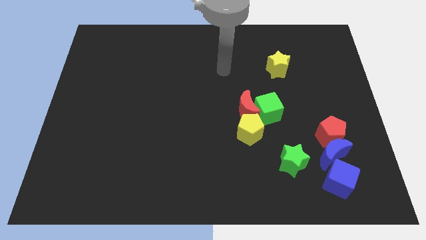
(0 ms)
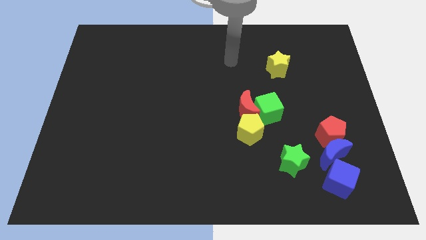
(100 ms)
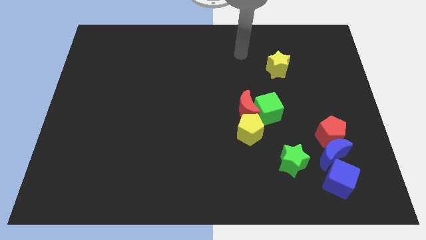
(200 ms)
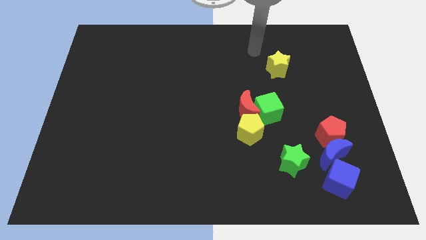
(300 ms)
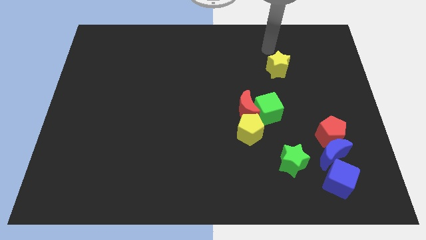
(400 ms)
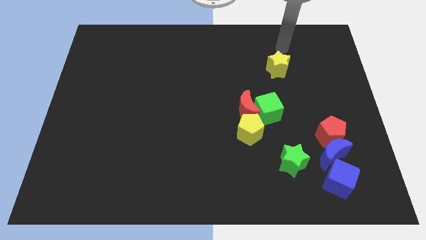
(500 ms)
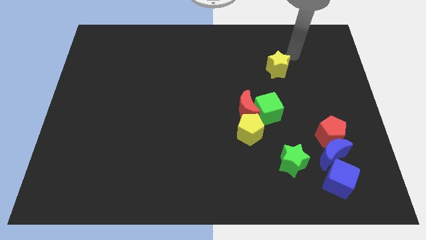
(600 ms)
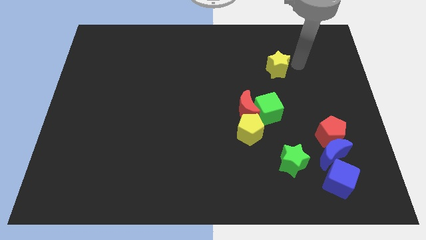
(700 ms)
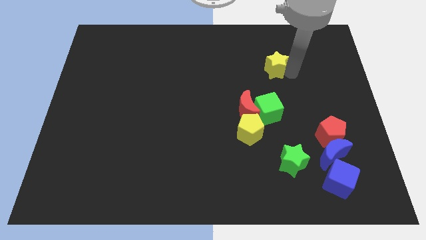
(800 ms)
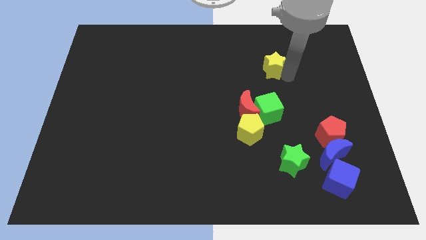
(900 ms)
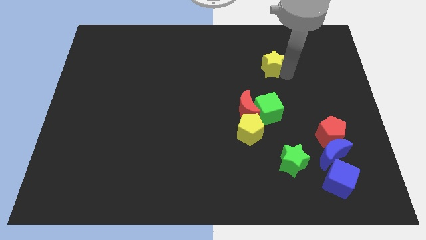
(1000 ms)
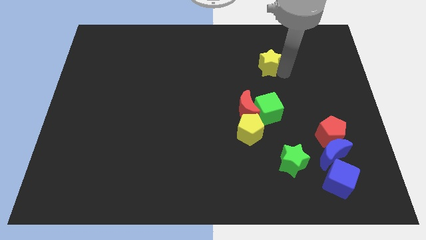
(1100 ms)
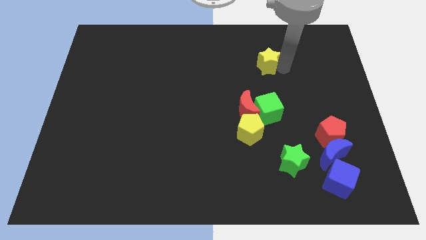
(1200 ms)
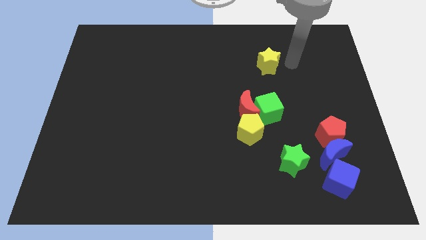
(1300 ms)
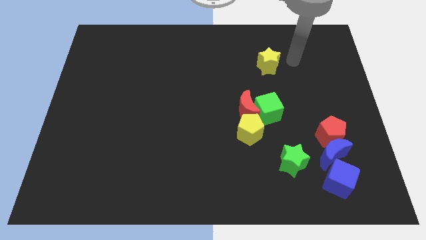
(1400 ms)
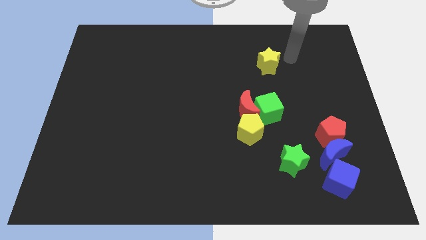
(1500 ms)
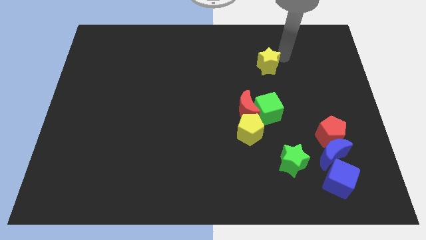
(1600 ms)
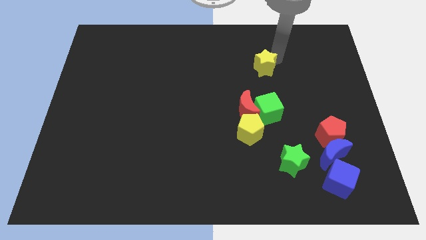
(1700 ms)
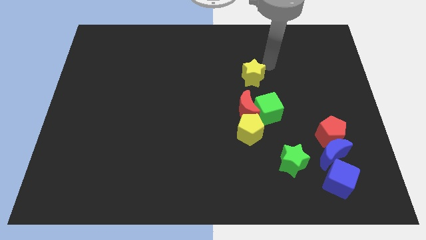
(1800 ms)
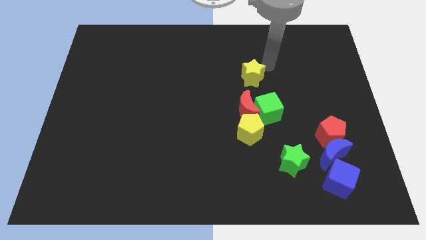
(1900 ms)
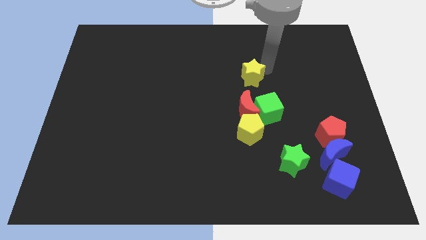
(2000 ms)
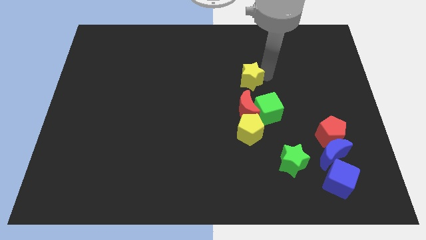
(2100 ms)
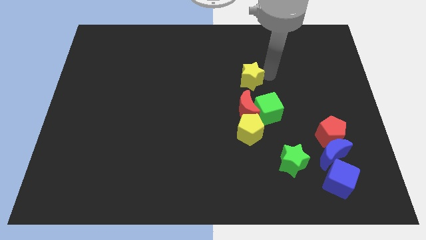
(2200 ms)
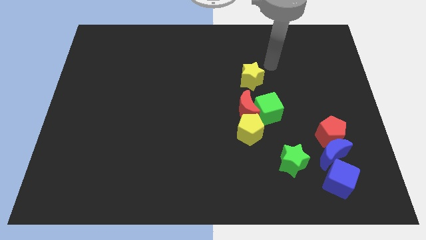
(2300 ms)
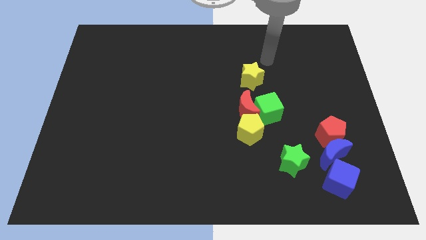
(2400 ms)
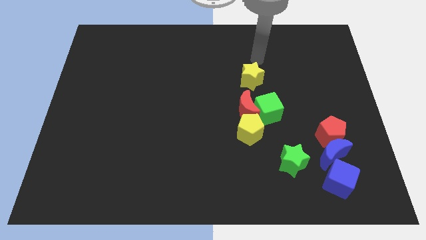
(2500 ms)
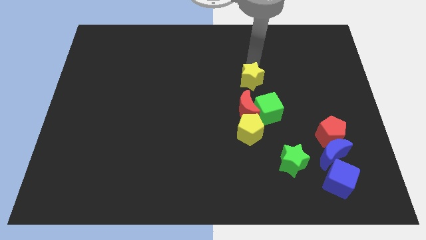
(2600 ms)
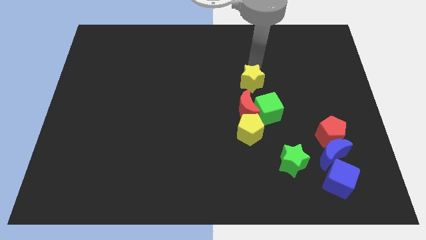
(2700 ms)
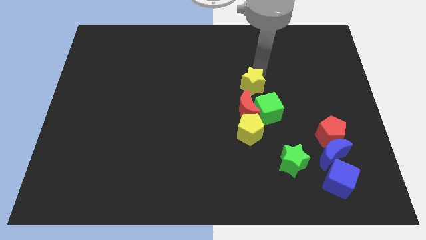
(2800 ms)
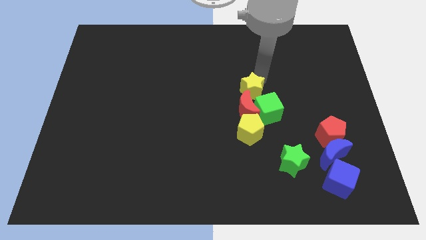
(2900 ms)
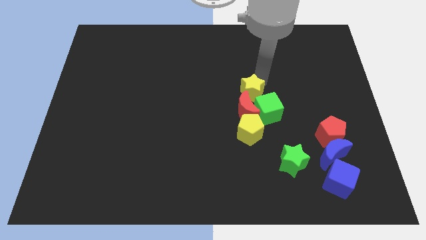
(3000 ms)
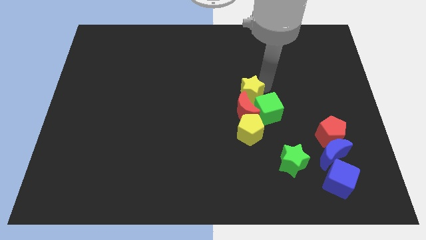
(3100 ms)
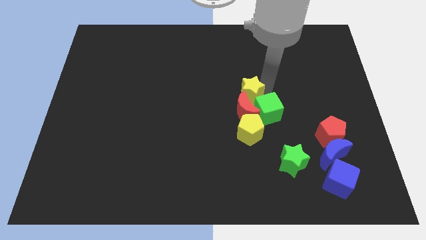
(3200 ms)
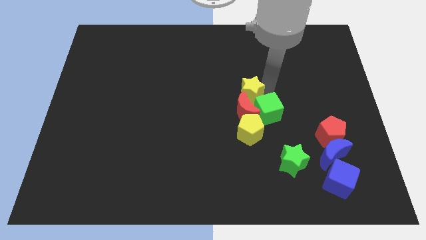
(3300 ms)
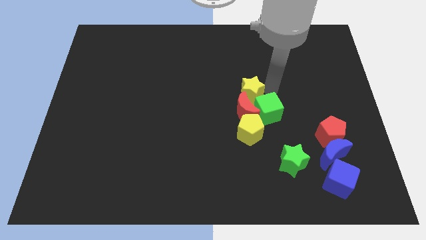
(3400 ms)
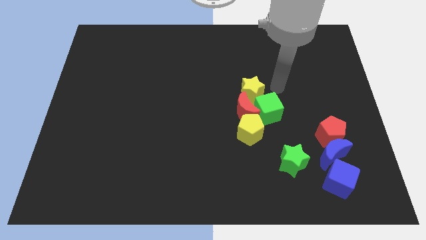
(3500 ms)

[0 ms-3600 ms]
move yellow star to the top of red moon

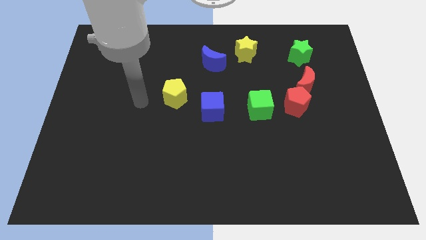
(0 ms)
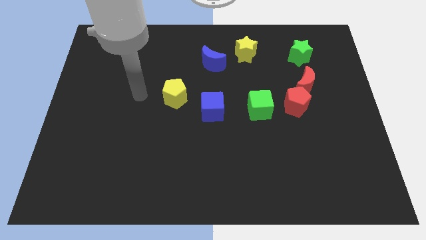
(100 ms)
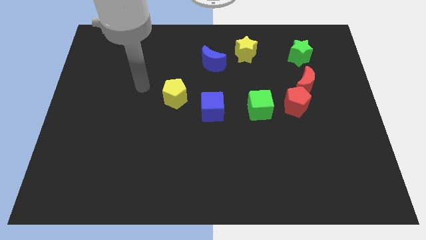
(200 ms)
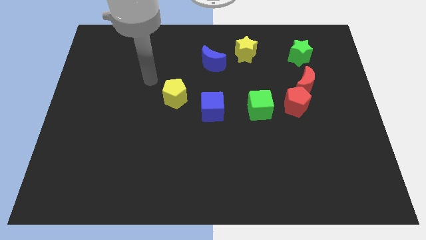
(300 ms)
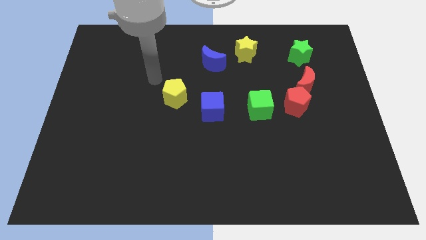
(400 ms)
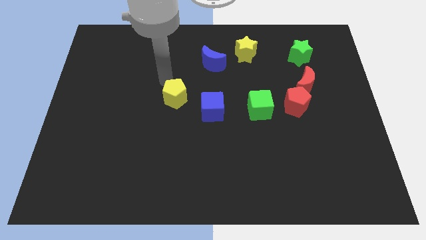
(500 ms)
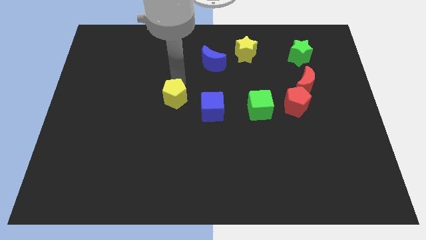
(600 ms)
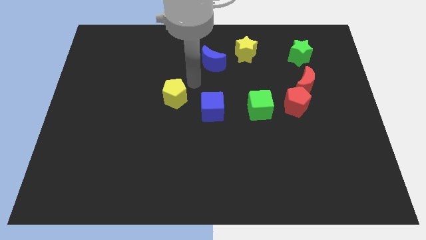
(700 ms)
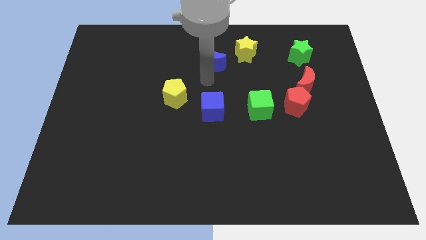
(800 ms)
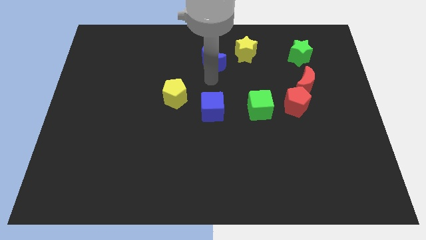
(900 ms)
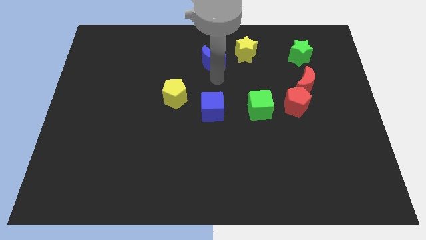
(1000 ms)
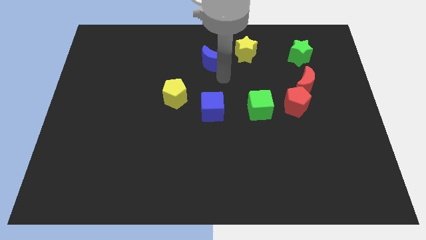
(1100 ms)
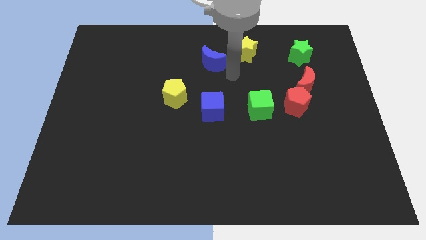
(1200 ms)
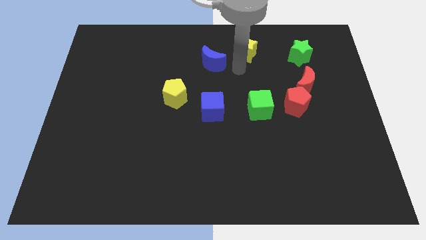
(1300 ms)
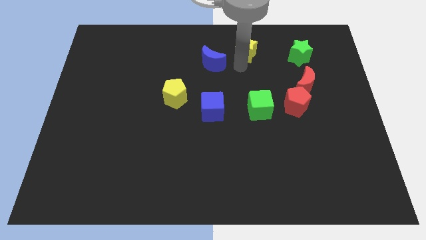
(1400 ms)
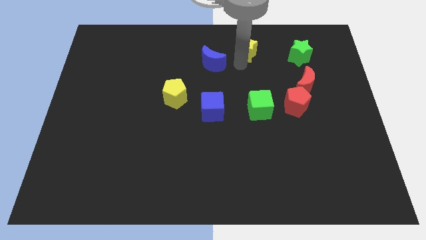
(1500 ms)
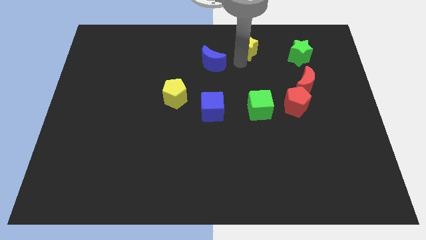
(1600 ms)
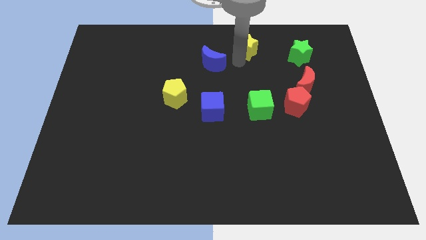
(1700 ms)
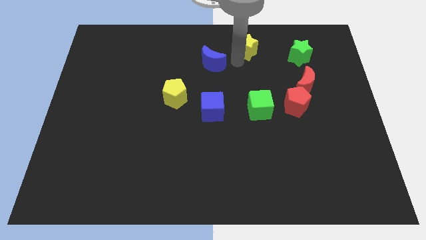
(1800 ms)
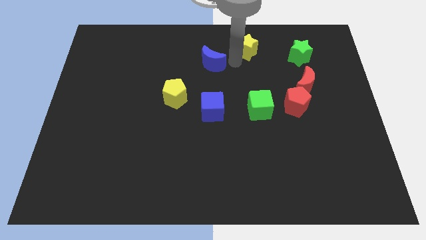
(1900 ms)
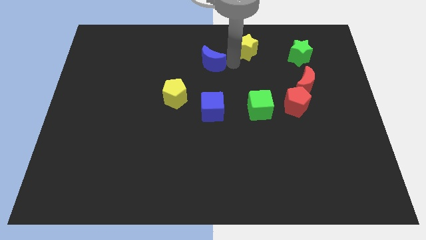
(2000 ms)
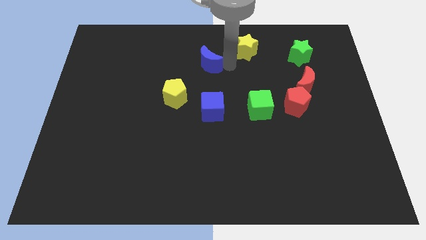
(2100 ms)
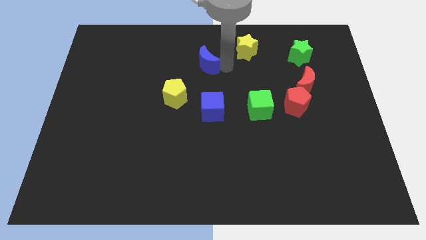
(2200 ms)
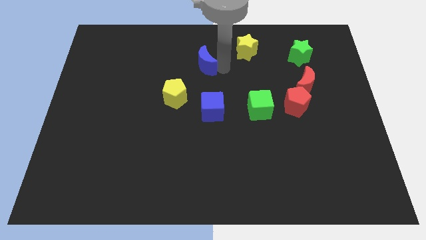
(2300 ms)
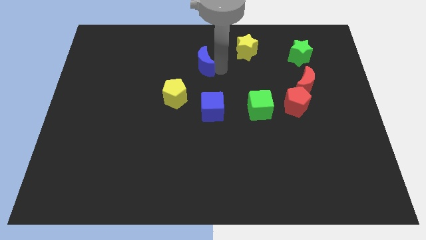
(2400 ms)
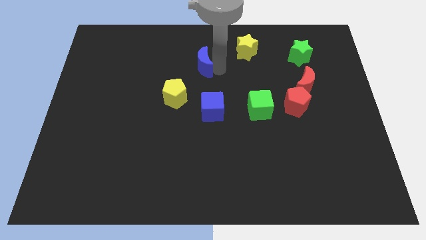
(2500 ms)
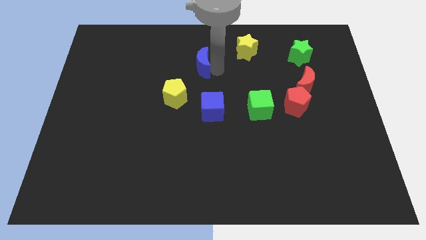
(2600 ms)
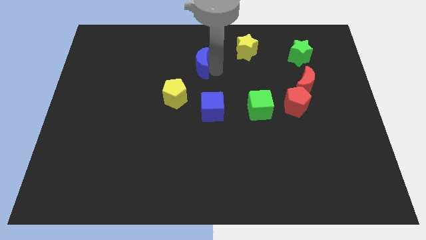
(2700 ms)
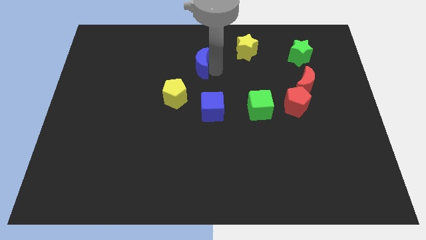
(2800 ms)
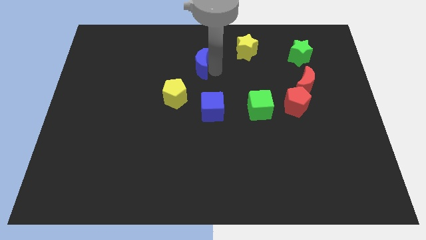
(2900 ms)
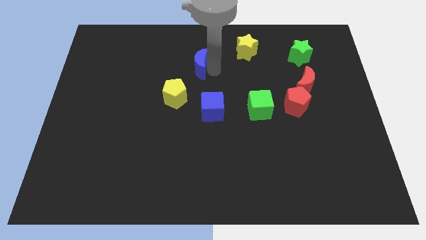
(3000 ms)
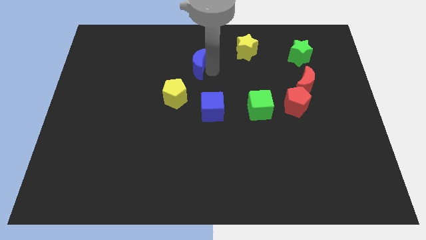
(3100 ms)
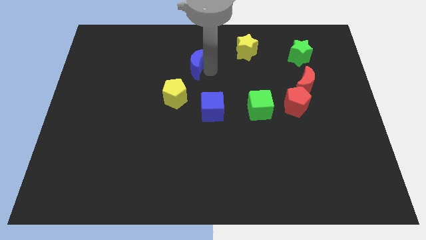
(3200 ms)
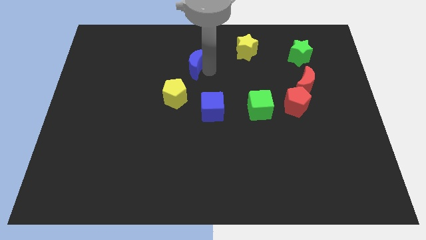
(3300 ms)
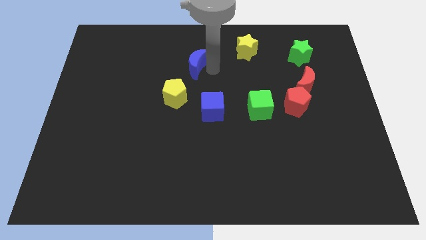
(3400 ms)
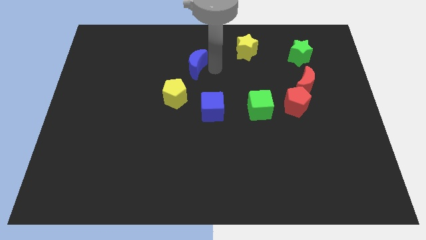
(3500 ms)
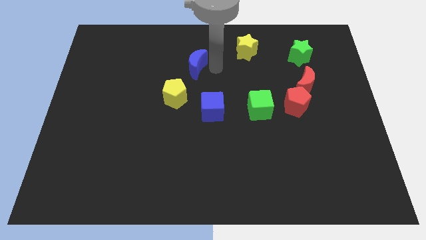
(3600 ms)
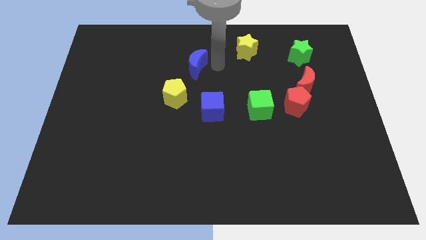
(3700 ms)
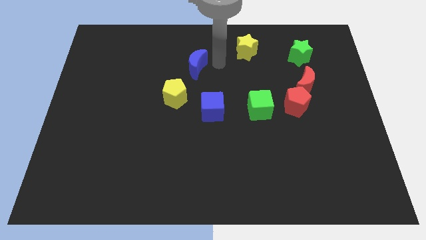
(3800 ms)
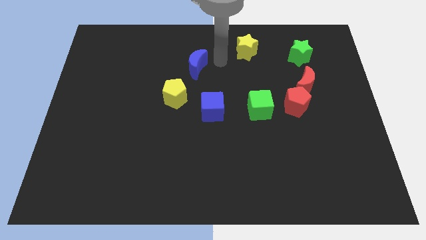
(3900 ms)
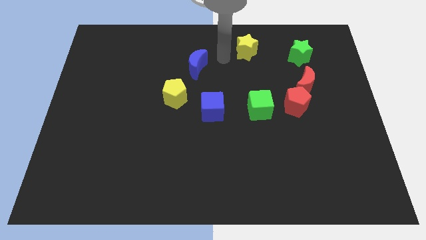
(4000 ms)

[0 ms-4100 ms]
slide the blue moon diagonally top right to yellow pentagon

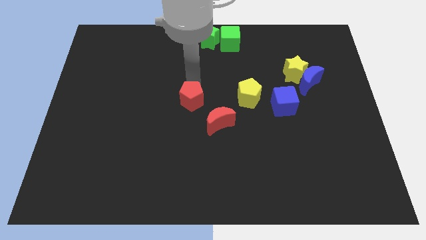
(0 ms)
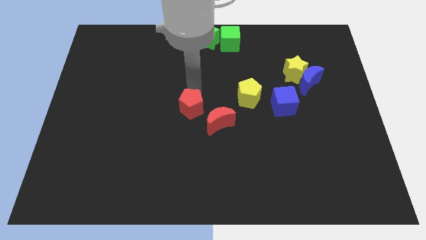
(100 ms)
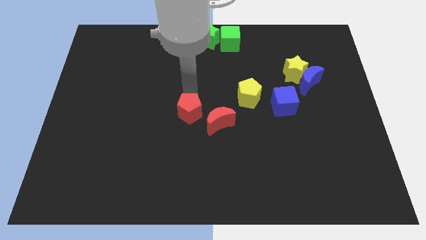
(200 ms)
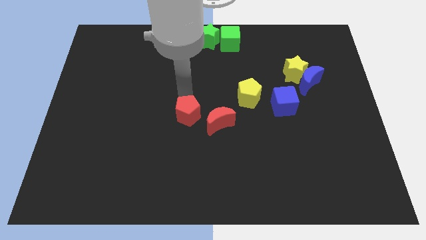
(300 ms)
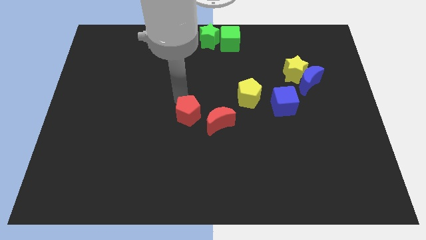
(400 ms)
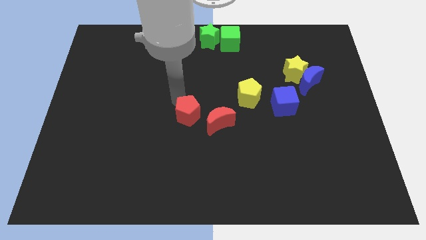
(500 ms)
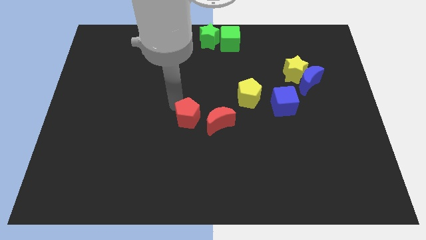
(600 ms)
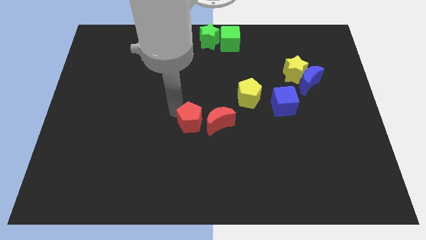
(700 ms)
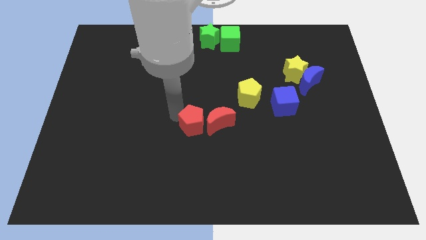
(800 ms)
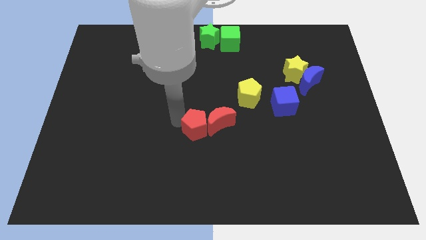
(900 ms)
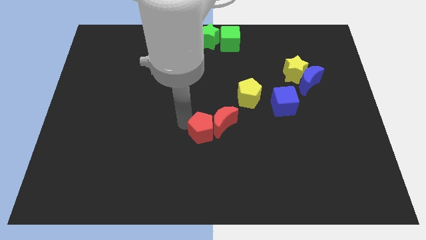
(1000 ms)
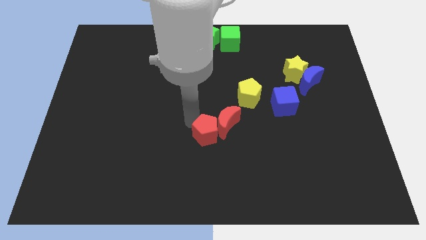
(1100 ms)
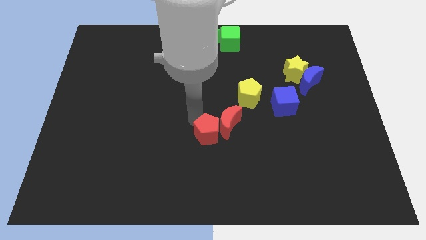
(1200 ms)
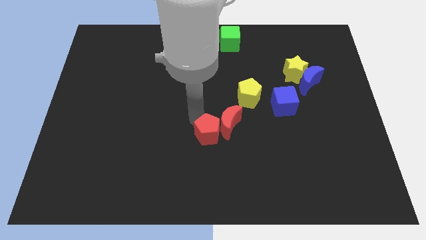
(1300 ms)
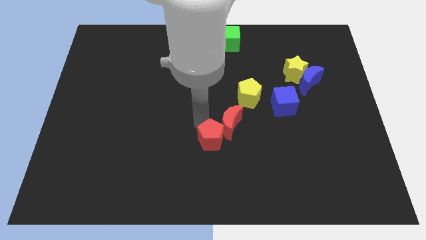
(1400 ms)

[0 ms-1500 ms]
push the red pentagon into the left of the red moon
